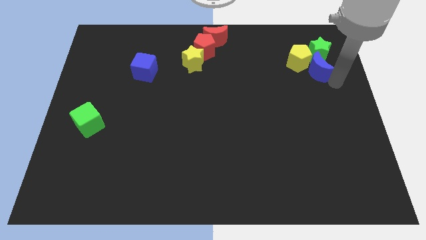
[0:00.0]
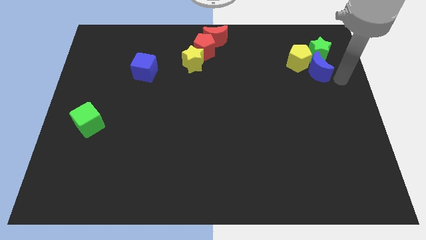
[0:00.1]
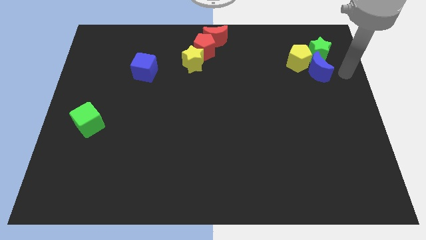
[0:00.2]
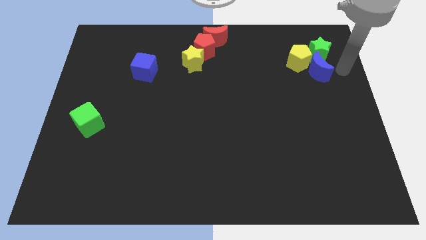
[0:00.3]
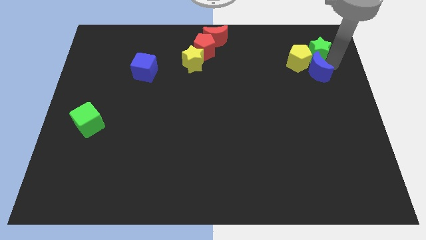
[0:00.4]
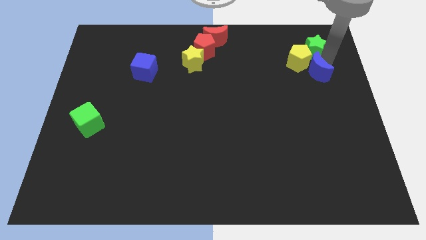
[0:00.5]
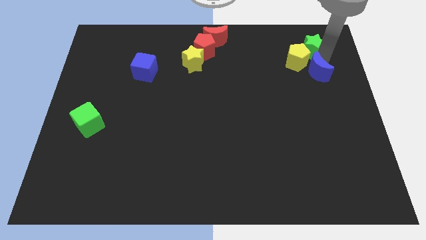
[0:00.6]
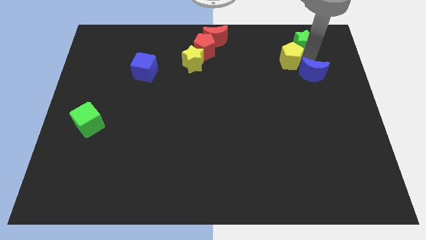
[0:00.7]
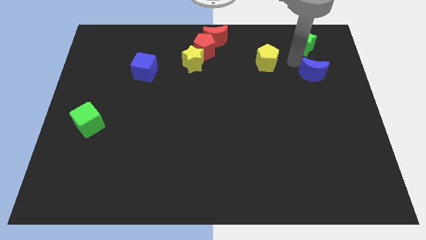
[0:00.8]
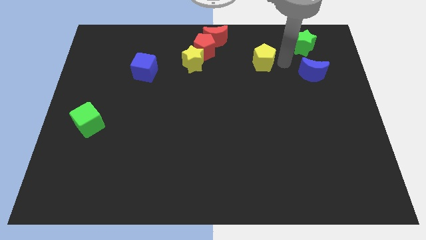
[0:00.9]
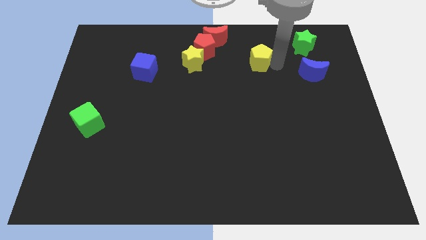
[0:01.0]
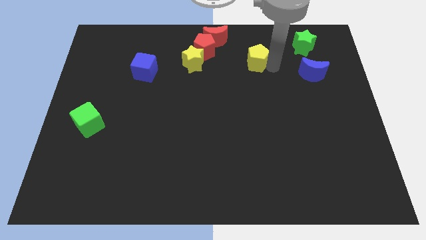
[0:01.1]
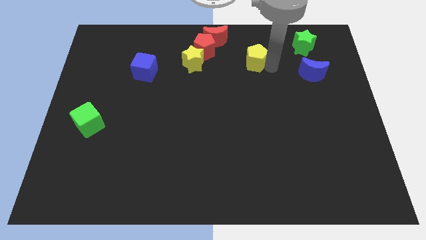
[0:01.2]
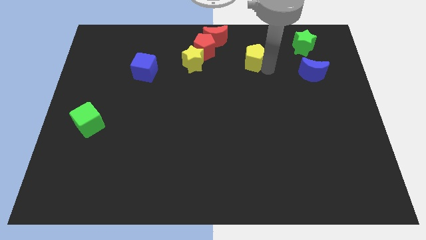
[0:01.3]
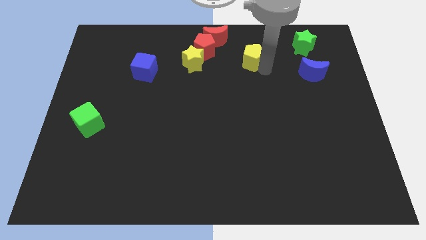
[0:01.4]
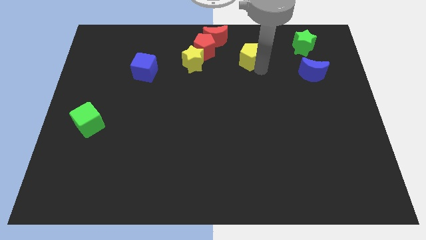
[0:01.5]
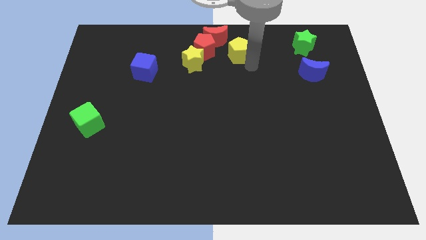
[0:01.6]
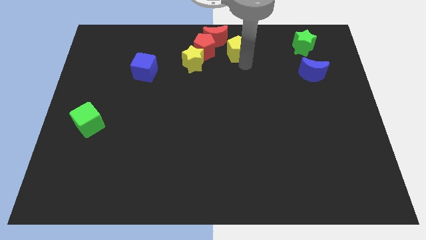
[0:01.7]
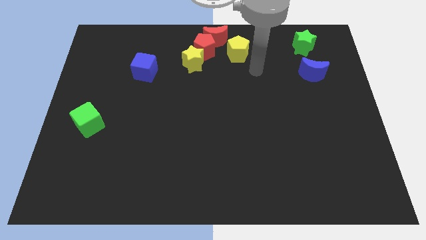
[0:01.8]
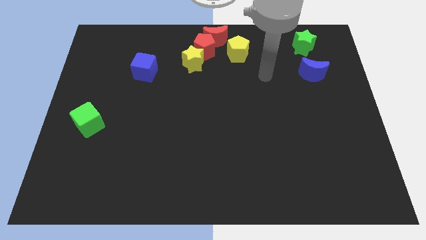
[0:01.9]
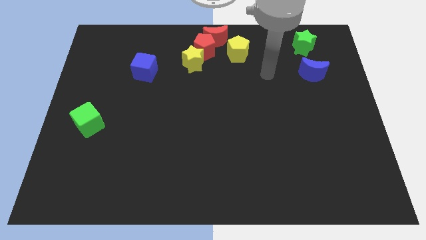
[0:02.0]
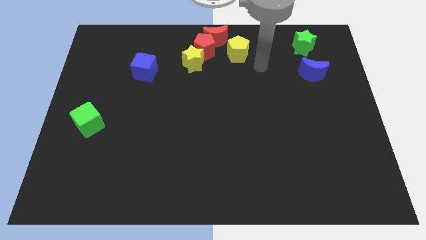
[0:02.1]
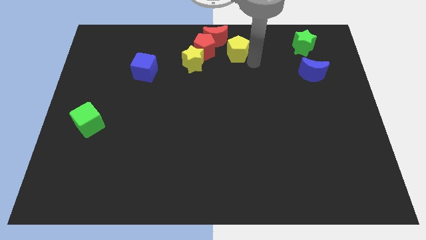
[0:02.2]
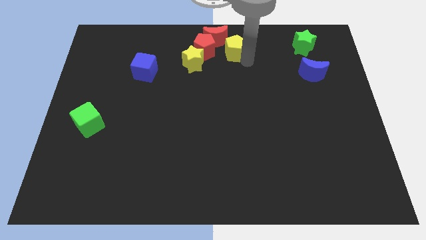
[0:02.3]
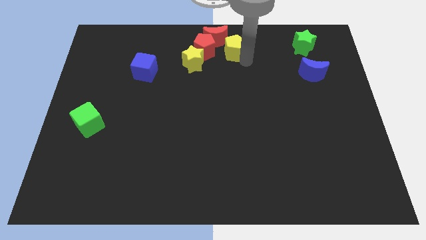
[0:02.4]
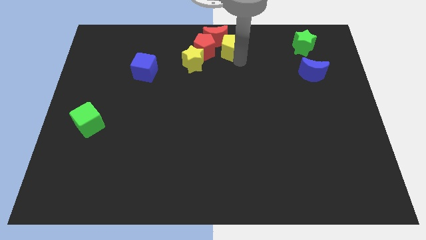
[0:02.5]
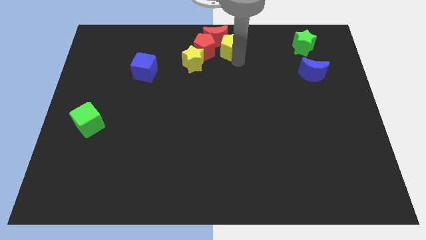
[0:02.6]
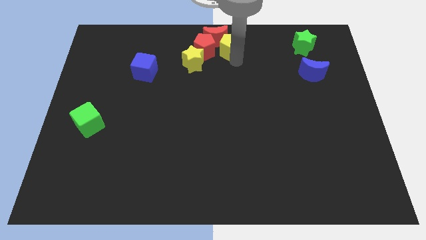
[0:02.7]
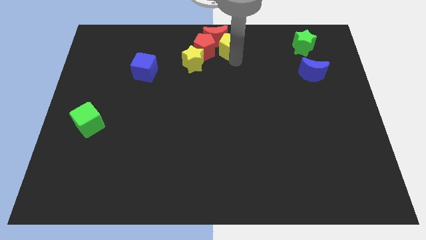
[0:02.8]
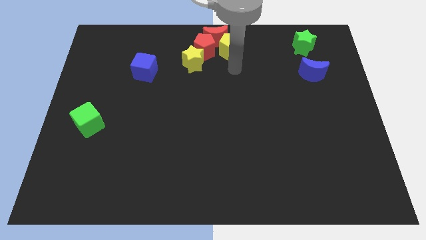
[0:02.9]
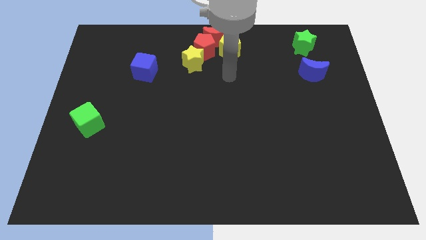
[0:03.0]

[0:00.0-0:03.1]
push the yellow pentagon close to the red crescent

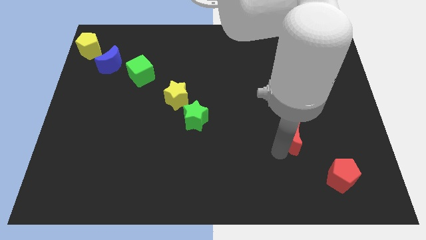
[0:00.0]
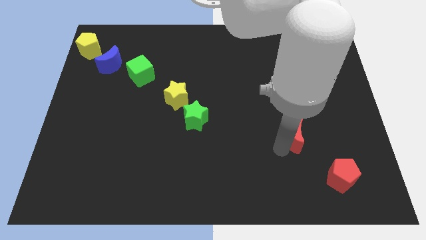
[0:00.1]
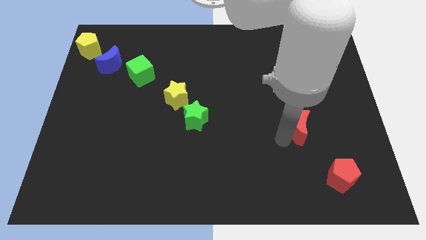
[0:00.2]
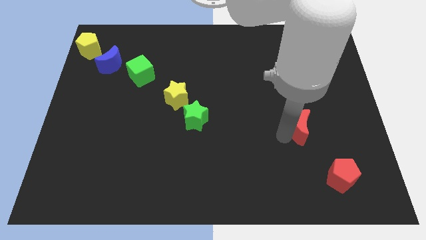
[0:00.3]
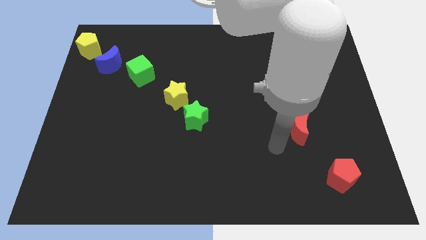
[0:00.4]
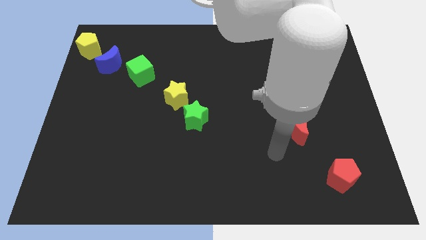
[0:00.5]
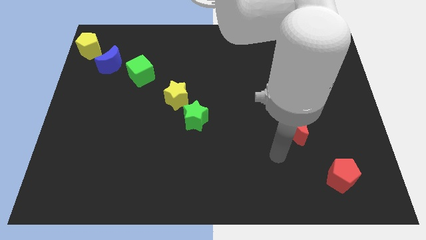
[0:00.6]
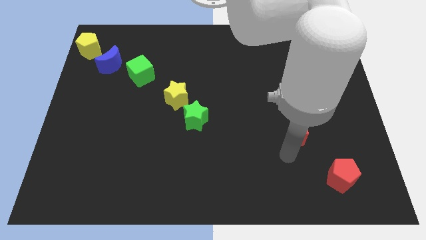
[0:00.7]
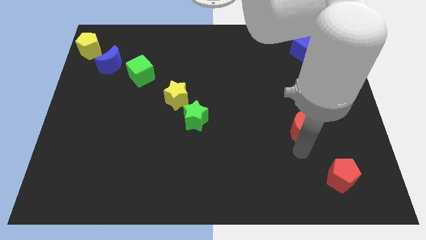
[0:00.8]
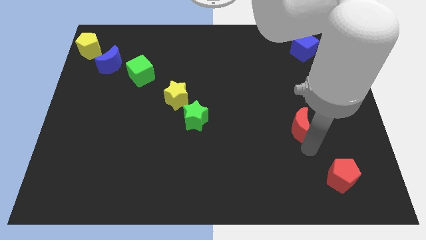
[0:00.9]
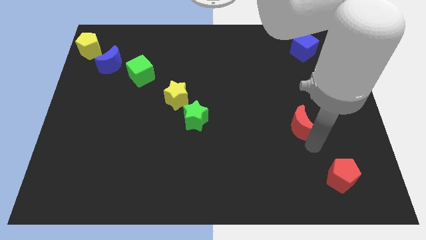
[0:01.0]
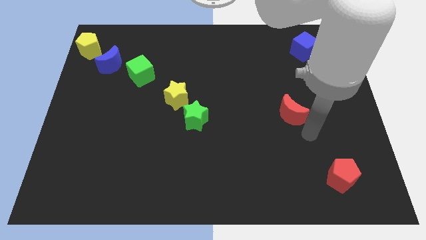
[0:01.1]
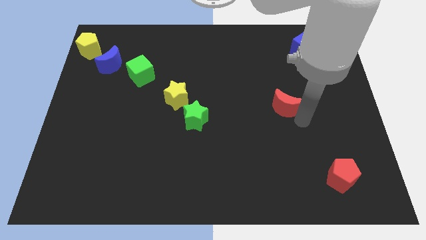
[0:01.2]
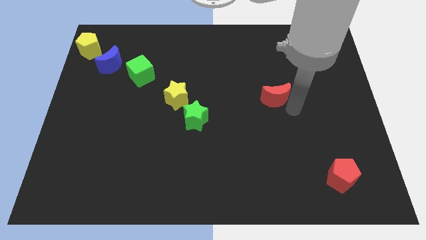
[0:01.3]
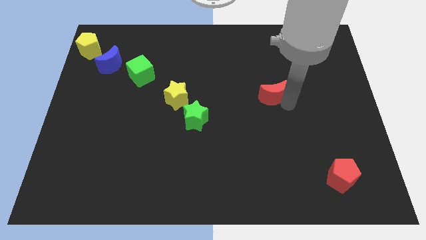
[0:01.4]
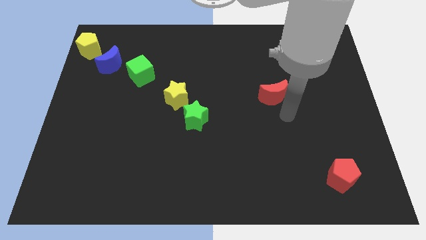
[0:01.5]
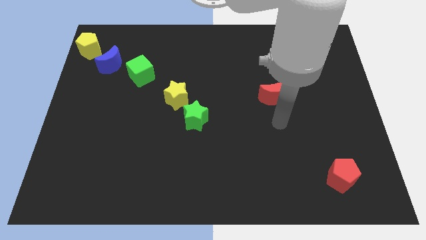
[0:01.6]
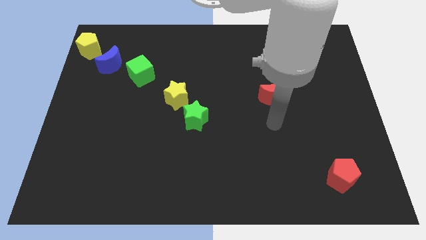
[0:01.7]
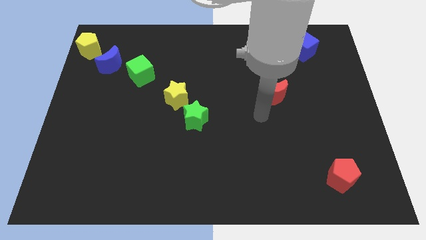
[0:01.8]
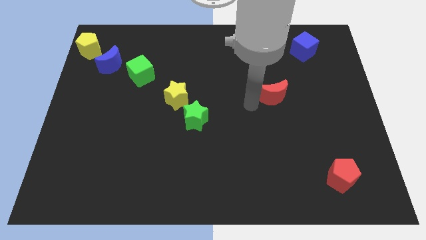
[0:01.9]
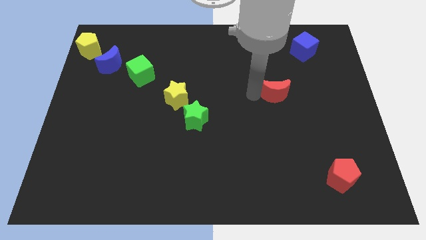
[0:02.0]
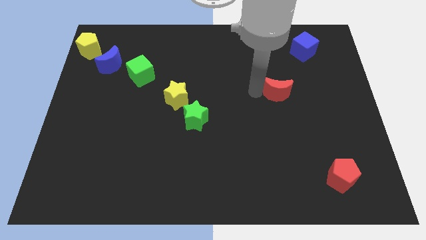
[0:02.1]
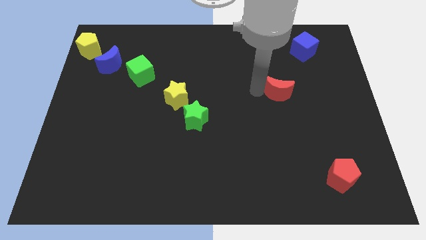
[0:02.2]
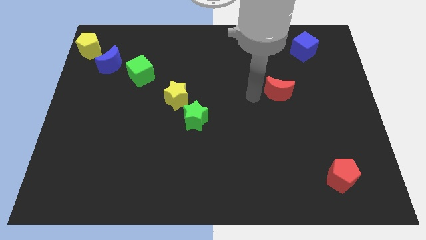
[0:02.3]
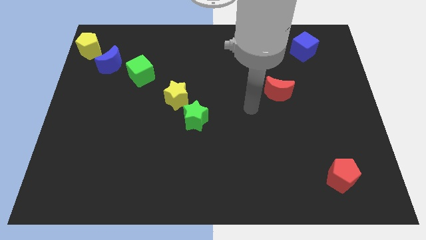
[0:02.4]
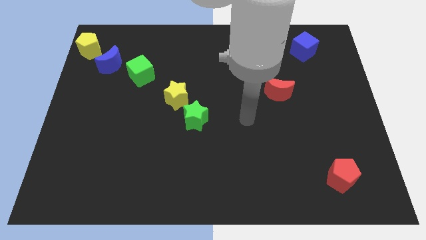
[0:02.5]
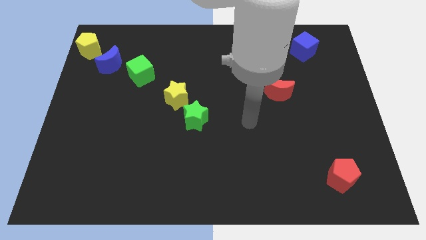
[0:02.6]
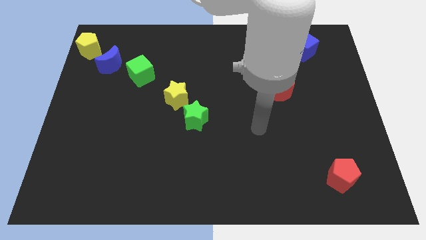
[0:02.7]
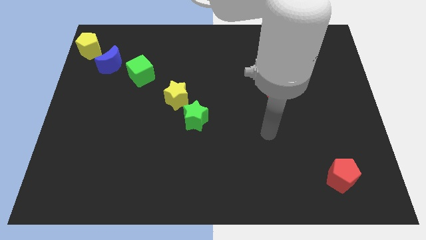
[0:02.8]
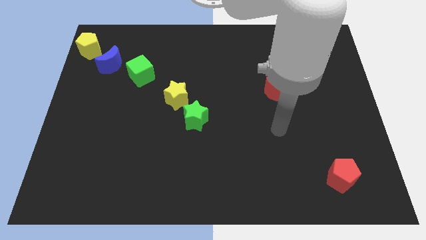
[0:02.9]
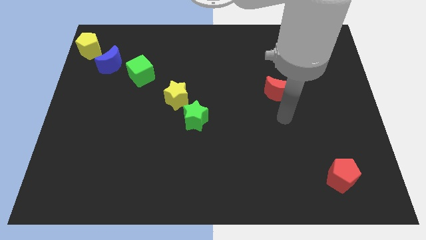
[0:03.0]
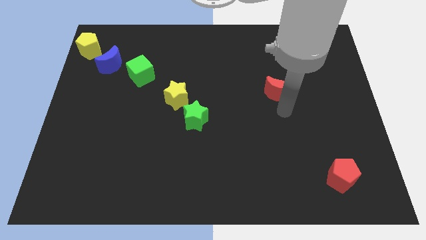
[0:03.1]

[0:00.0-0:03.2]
move the red crescent towards top

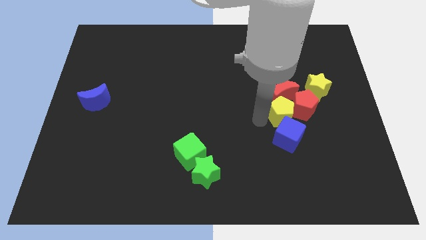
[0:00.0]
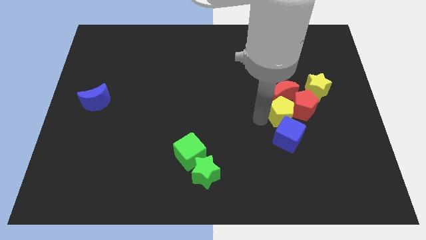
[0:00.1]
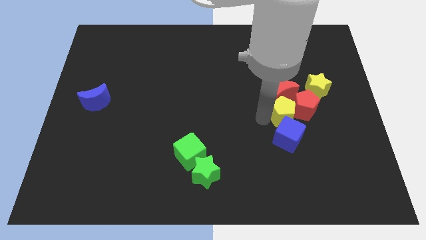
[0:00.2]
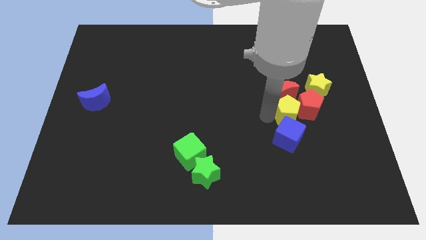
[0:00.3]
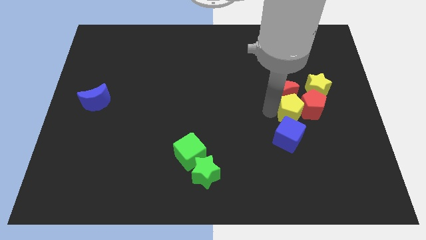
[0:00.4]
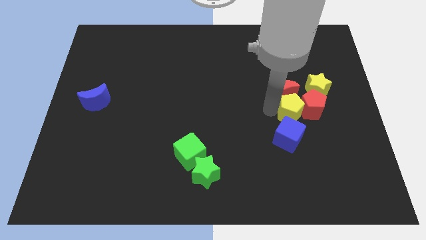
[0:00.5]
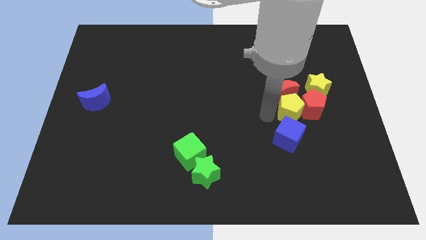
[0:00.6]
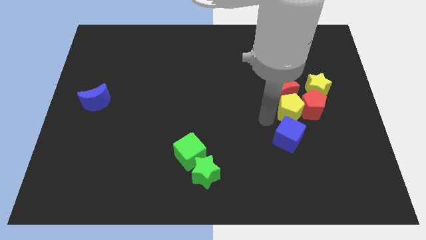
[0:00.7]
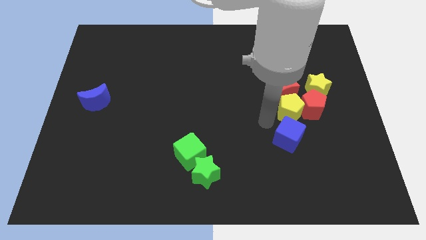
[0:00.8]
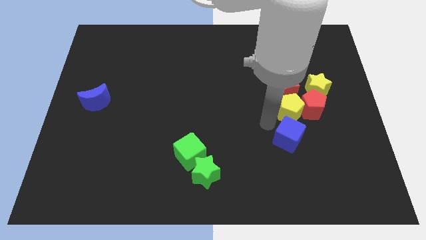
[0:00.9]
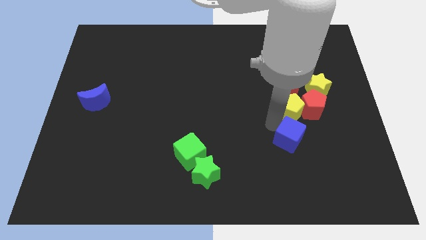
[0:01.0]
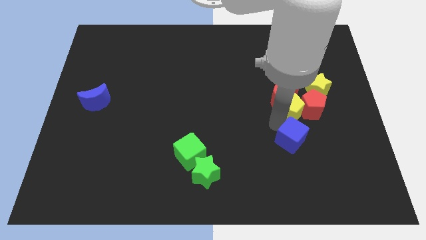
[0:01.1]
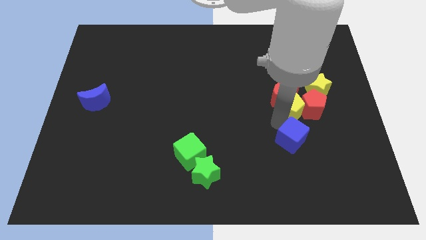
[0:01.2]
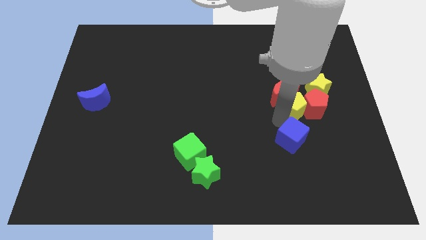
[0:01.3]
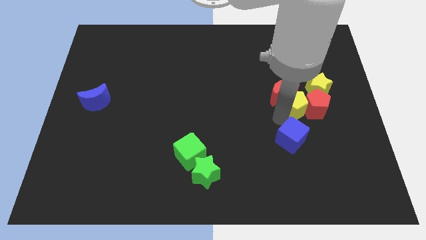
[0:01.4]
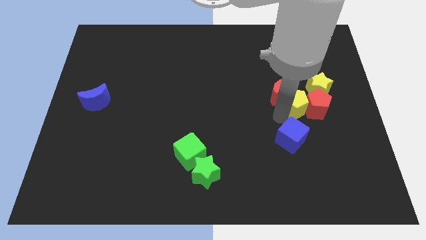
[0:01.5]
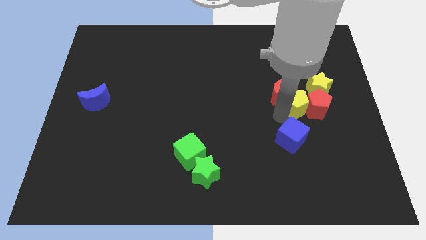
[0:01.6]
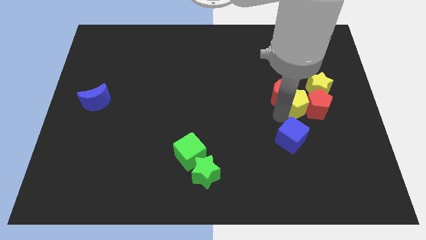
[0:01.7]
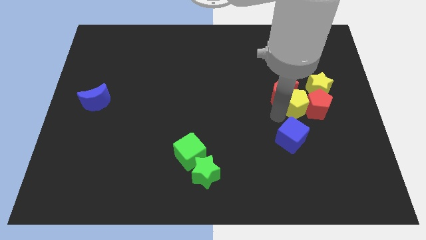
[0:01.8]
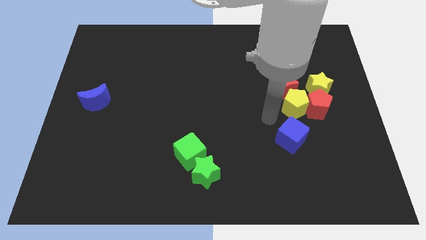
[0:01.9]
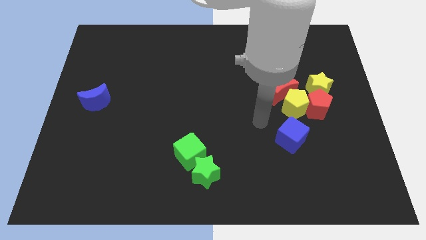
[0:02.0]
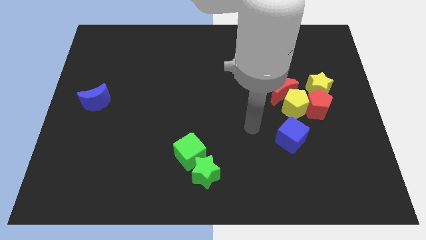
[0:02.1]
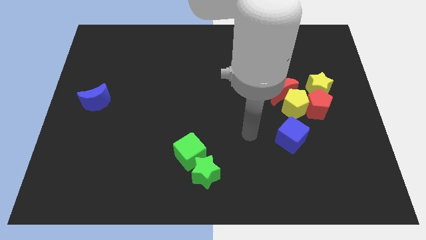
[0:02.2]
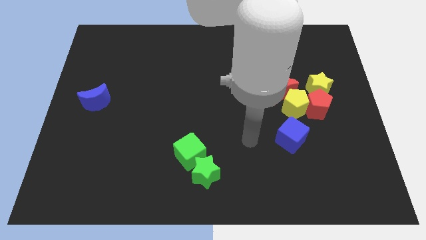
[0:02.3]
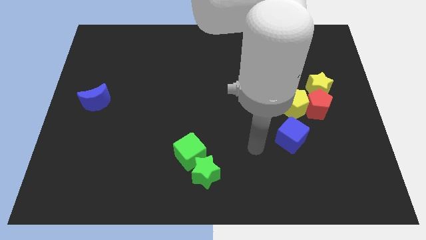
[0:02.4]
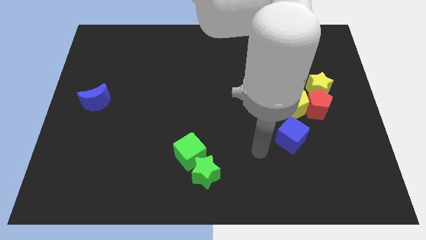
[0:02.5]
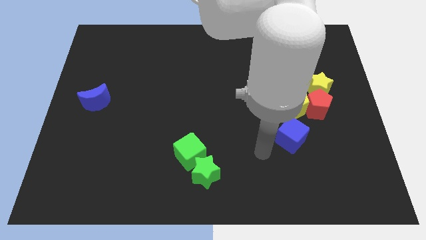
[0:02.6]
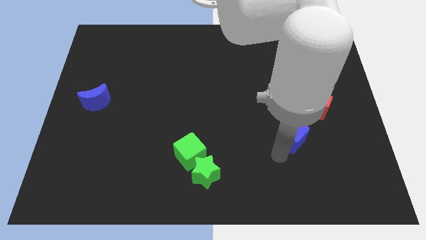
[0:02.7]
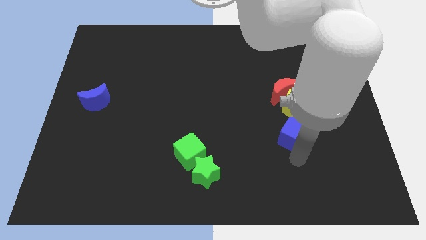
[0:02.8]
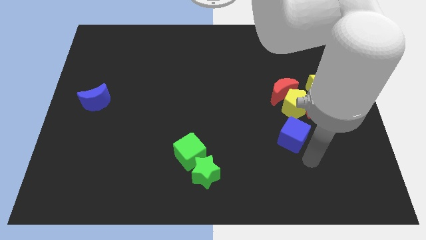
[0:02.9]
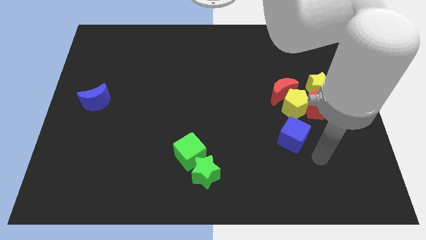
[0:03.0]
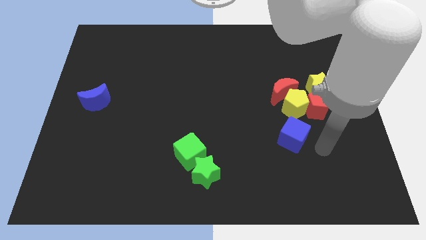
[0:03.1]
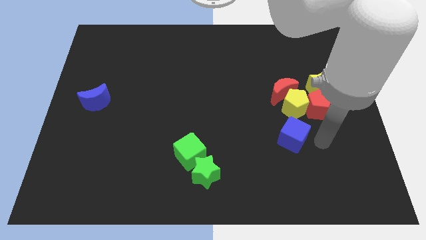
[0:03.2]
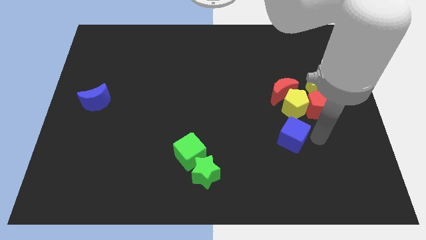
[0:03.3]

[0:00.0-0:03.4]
move the yellow pentagon to the left of the red pentagon
